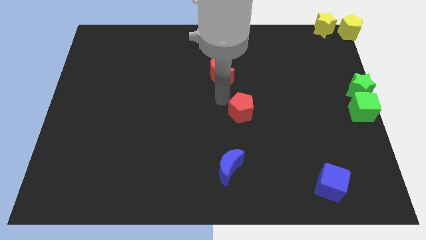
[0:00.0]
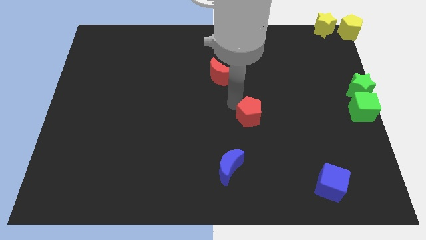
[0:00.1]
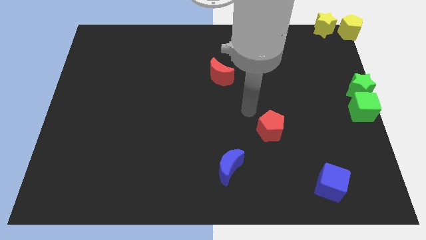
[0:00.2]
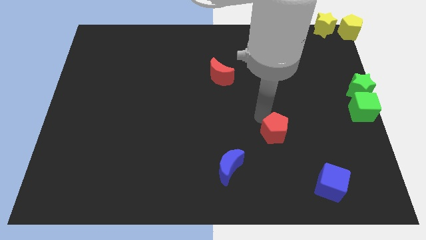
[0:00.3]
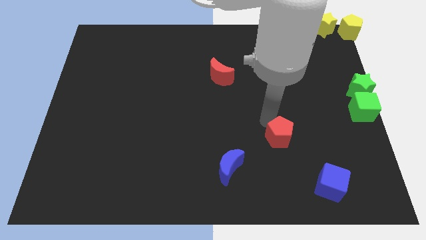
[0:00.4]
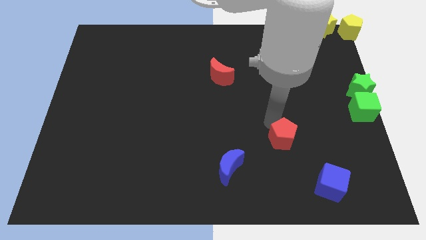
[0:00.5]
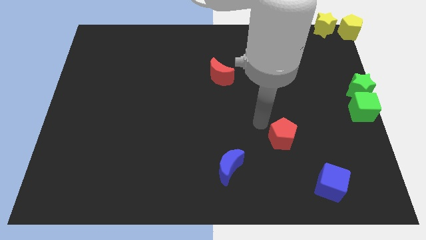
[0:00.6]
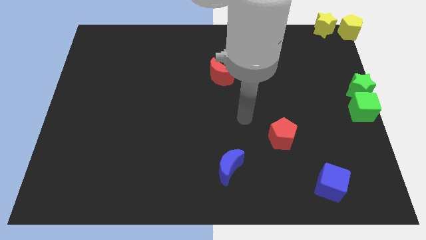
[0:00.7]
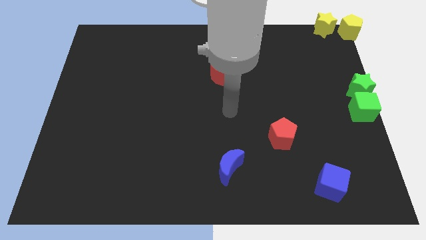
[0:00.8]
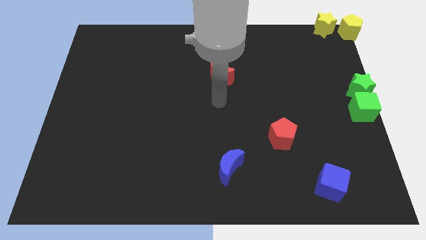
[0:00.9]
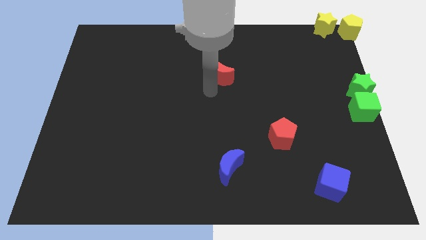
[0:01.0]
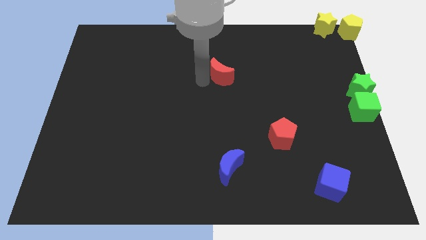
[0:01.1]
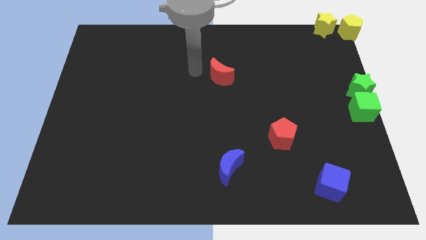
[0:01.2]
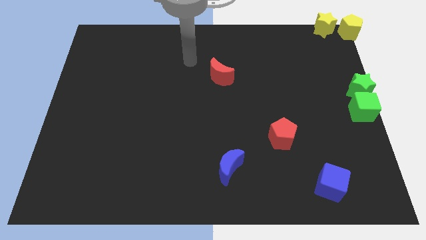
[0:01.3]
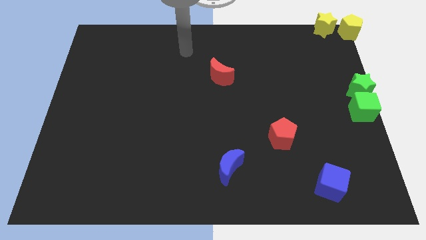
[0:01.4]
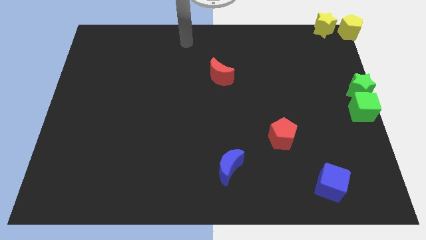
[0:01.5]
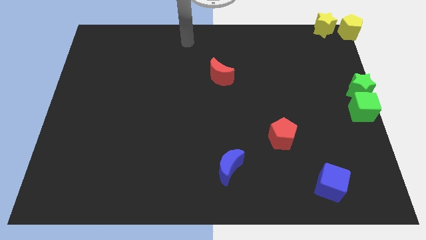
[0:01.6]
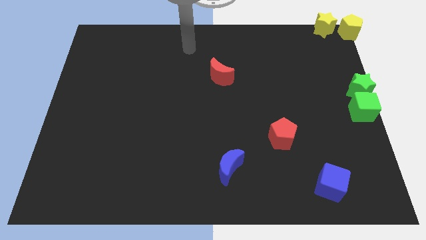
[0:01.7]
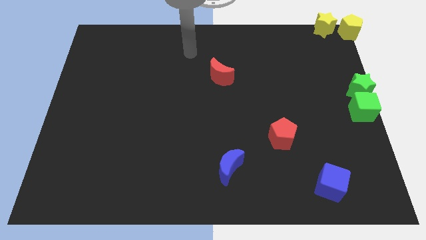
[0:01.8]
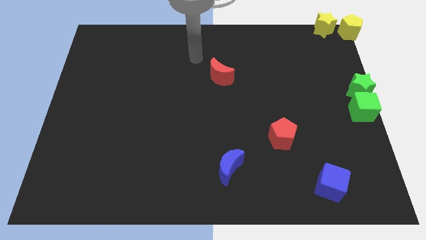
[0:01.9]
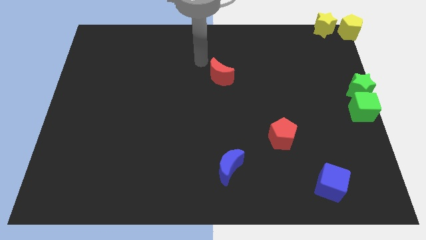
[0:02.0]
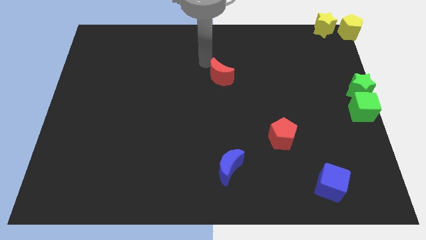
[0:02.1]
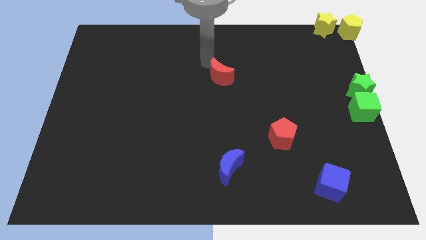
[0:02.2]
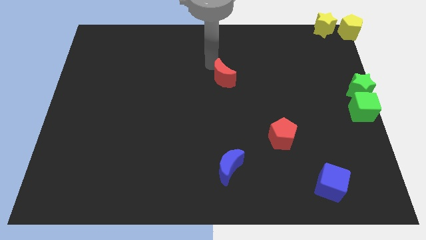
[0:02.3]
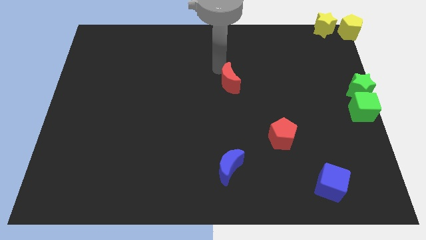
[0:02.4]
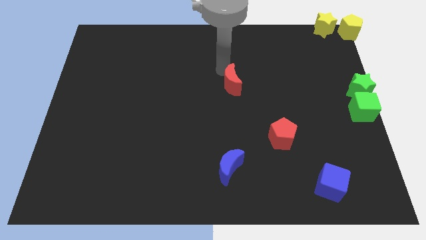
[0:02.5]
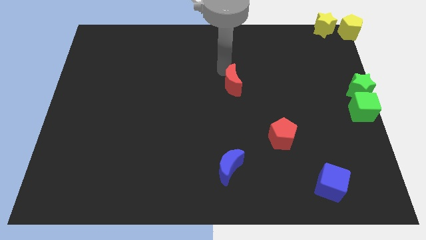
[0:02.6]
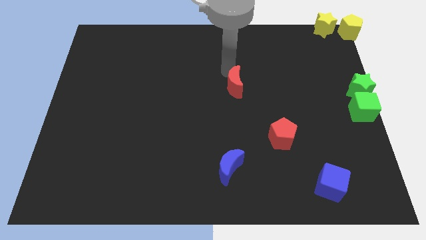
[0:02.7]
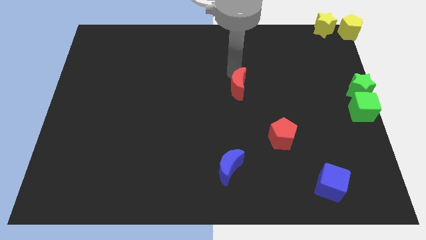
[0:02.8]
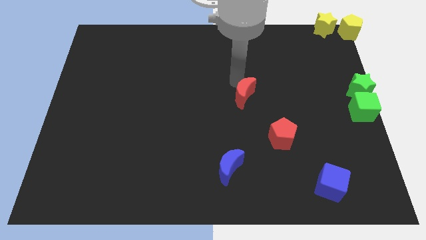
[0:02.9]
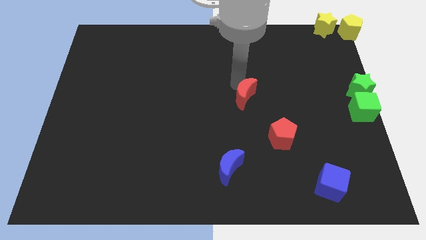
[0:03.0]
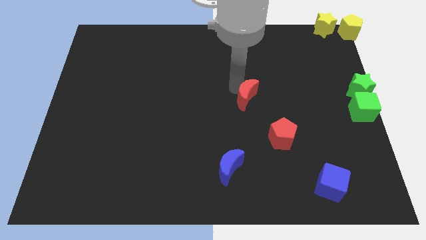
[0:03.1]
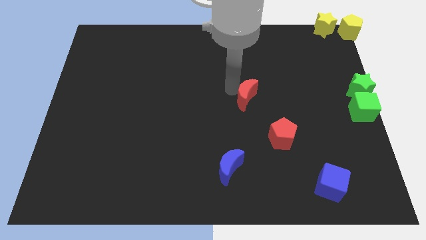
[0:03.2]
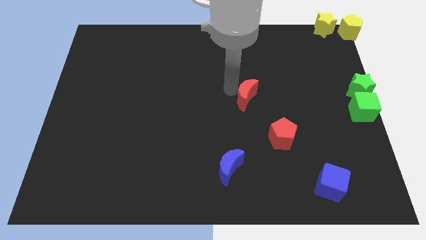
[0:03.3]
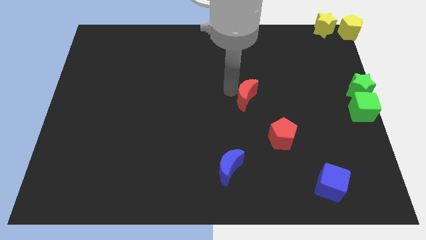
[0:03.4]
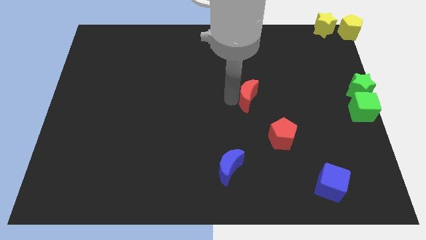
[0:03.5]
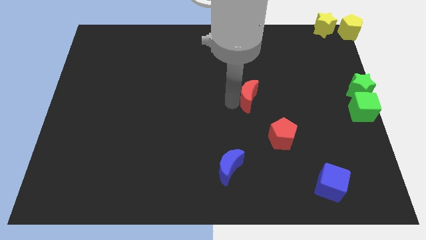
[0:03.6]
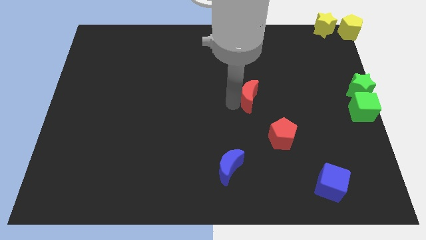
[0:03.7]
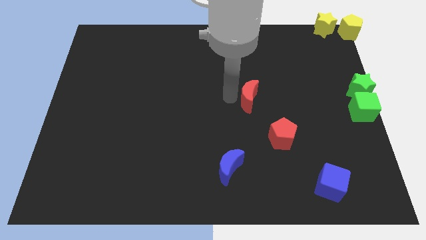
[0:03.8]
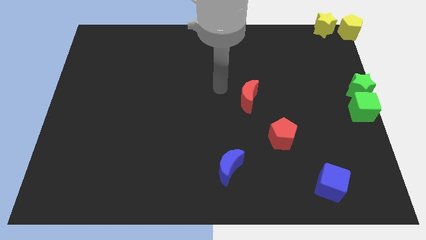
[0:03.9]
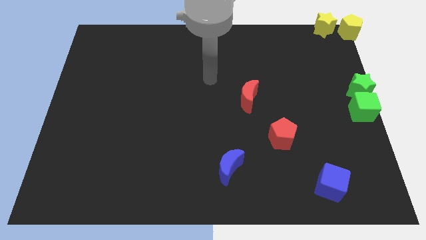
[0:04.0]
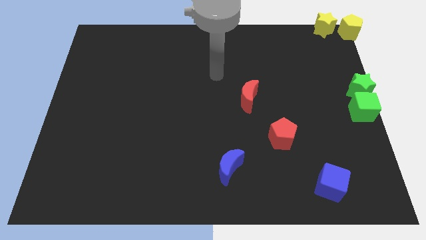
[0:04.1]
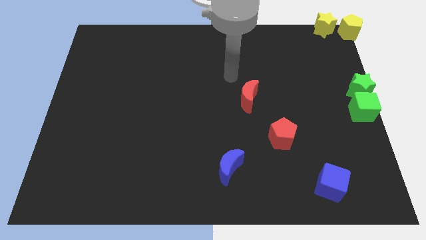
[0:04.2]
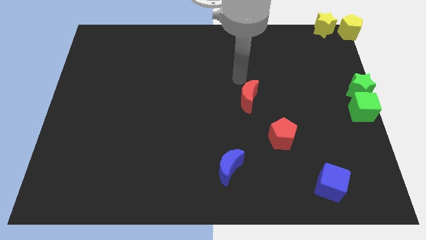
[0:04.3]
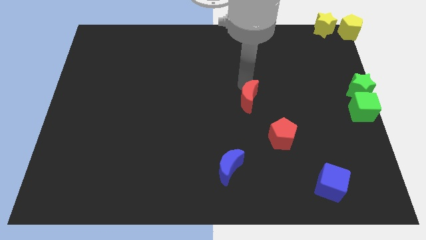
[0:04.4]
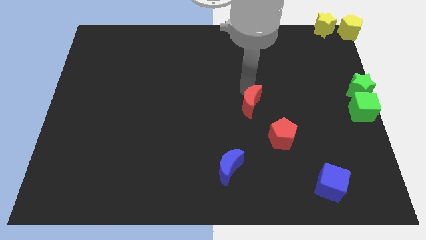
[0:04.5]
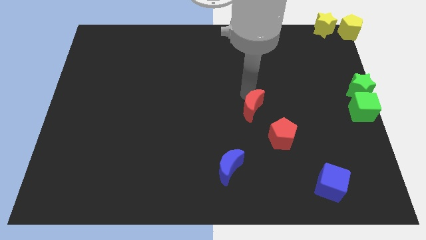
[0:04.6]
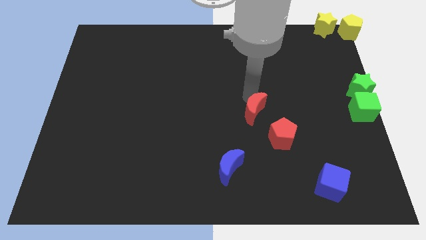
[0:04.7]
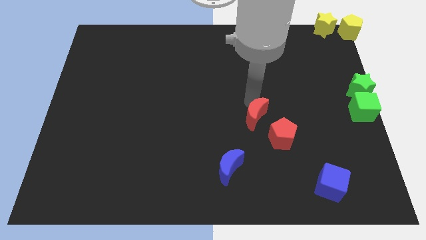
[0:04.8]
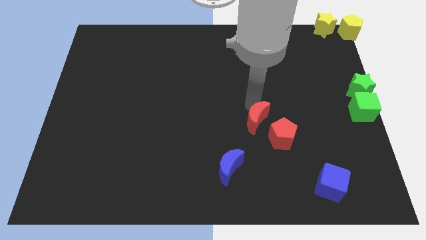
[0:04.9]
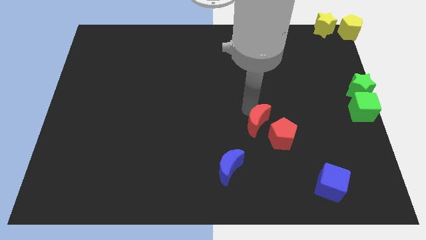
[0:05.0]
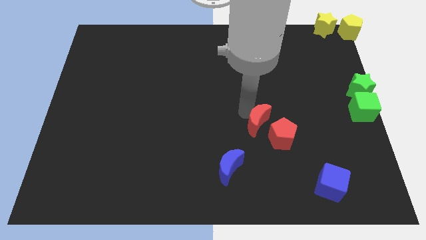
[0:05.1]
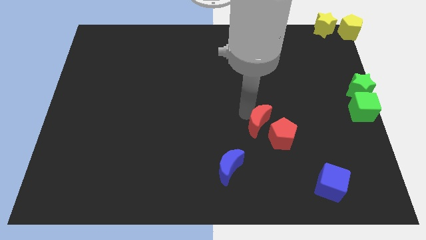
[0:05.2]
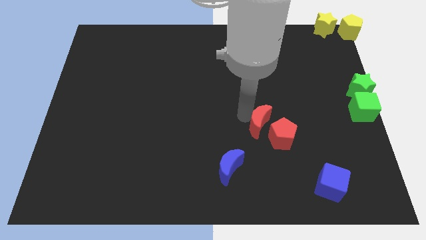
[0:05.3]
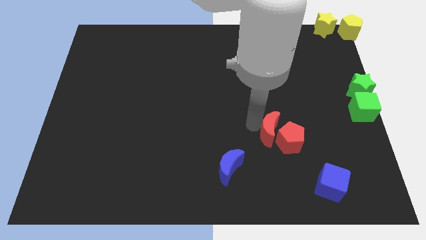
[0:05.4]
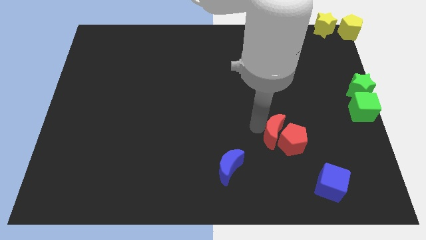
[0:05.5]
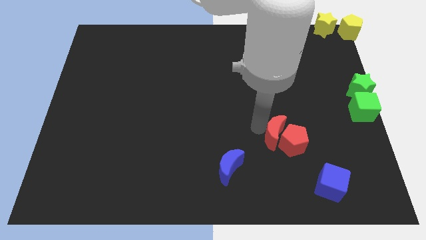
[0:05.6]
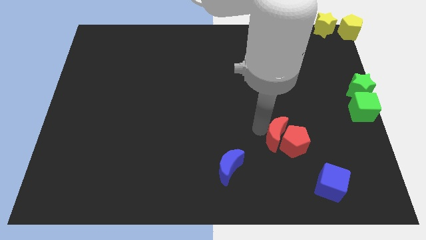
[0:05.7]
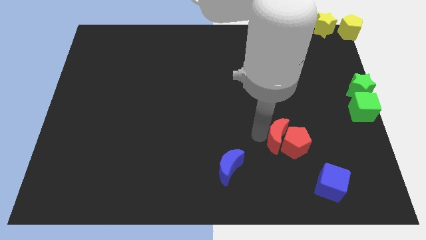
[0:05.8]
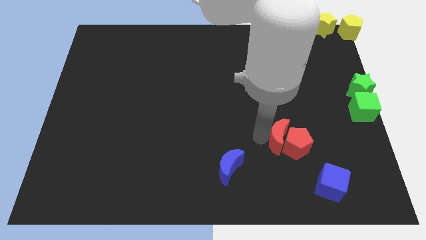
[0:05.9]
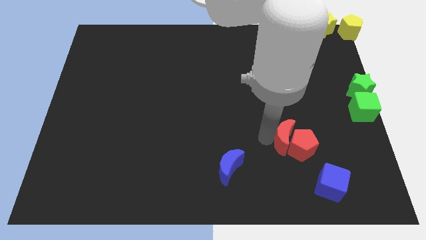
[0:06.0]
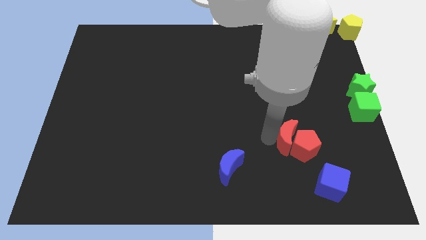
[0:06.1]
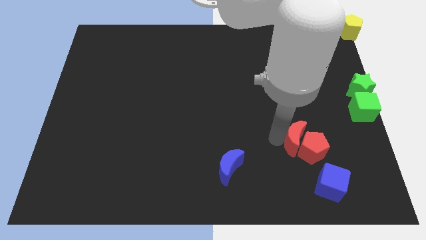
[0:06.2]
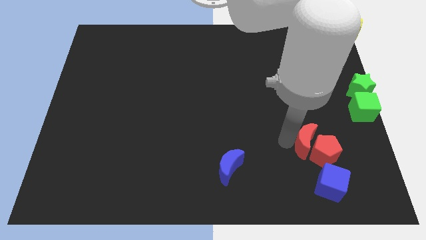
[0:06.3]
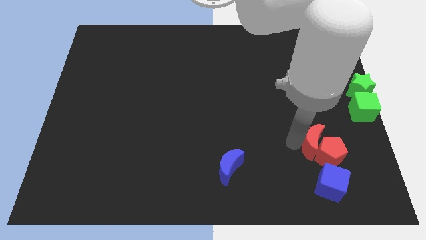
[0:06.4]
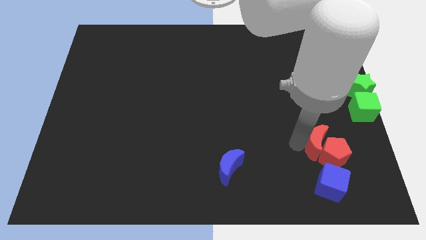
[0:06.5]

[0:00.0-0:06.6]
push the red pentagon and red crescent slightly downwards

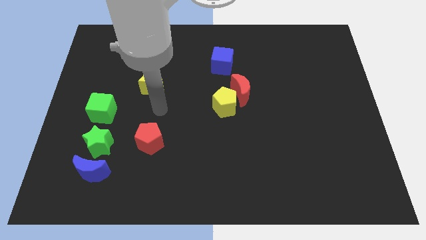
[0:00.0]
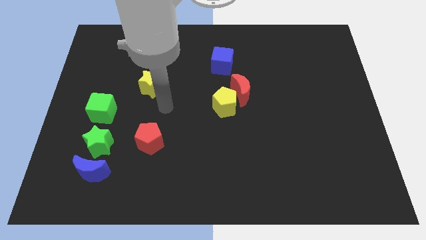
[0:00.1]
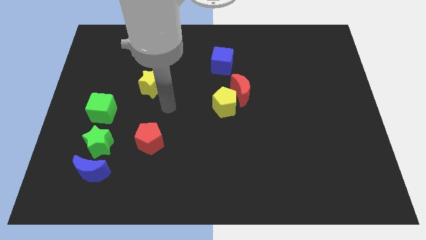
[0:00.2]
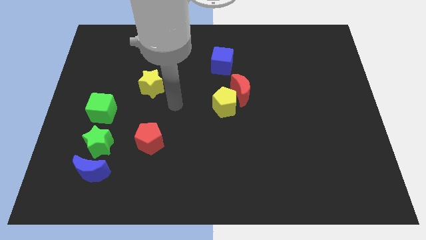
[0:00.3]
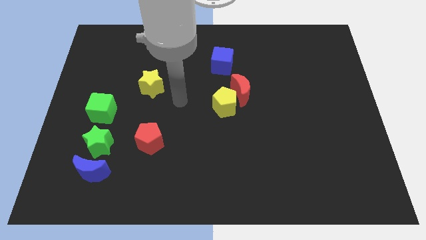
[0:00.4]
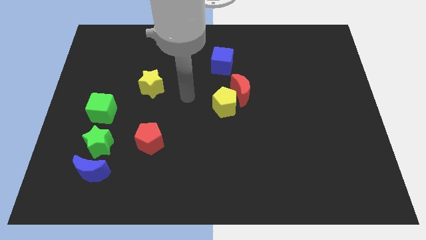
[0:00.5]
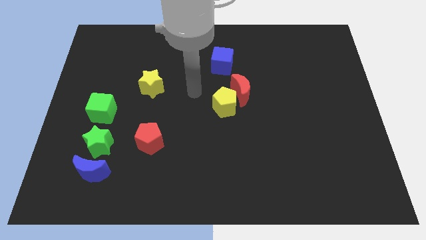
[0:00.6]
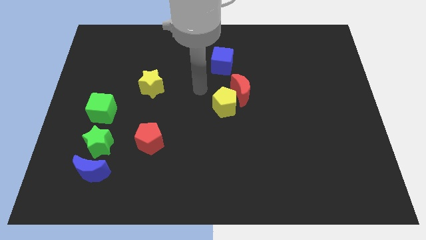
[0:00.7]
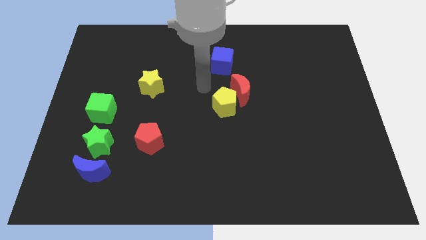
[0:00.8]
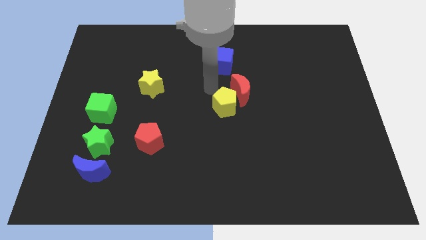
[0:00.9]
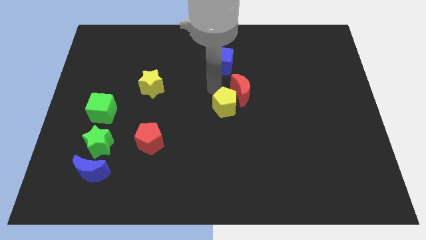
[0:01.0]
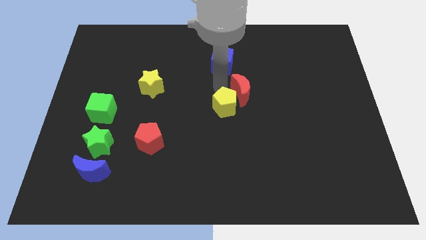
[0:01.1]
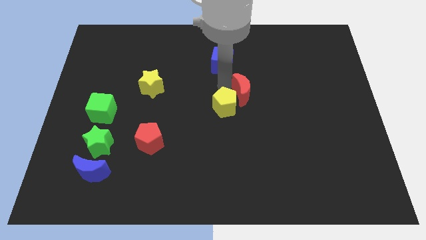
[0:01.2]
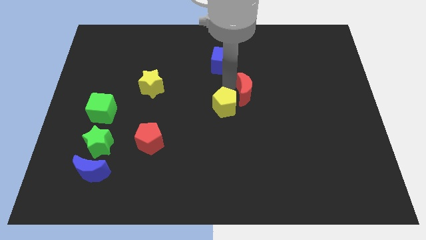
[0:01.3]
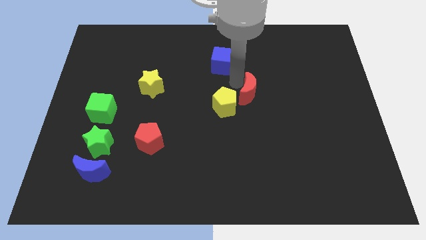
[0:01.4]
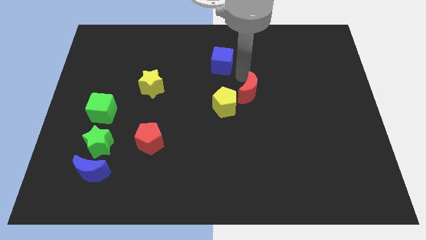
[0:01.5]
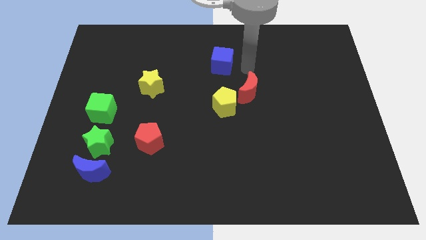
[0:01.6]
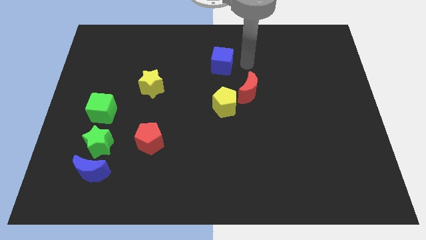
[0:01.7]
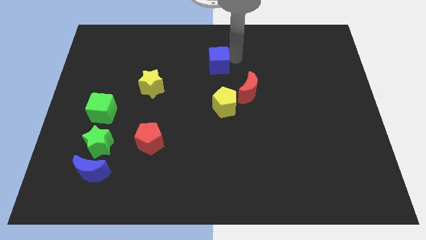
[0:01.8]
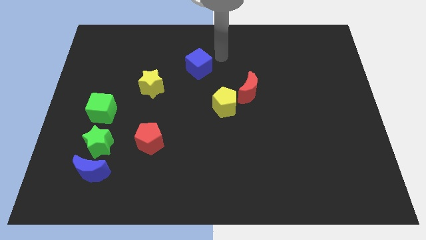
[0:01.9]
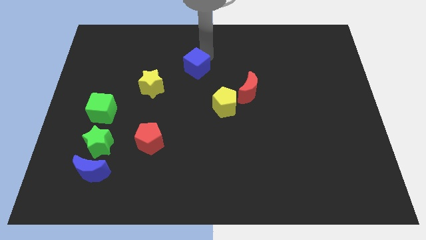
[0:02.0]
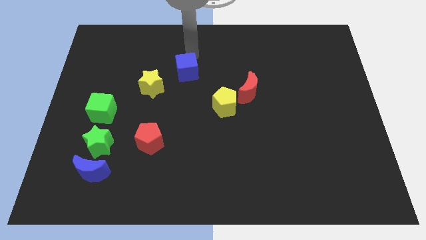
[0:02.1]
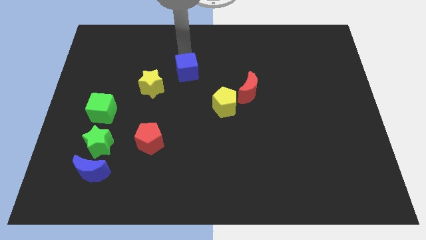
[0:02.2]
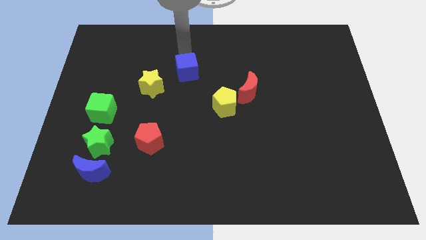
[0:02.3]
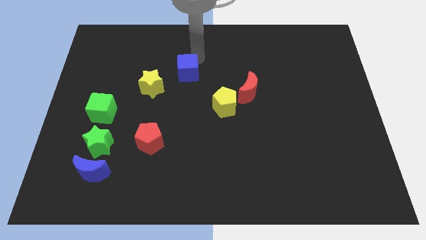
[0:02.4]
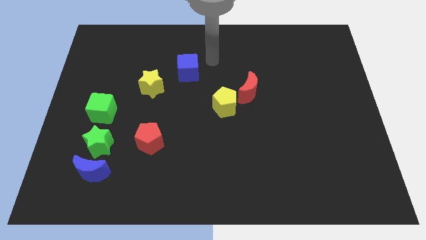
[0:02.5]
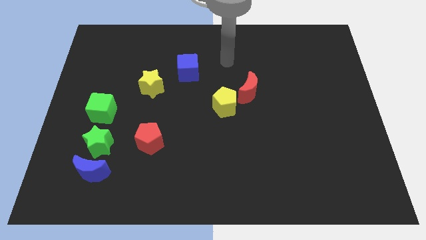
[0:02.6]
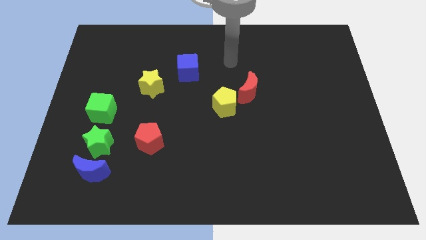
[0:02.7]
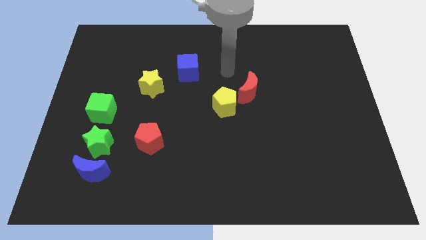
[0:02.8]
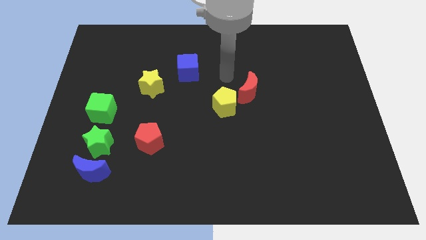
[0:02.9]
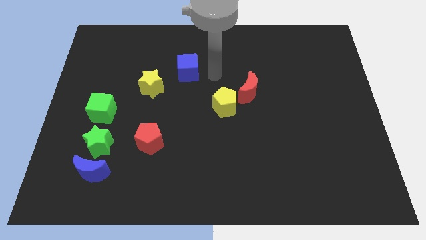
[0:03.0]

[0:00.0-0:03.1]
move the blue cube close to the yellow star
